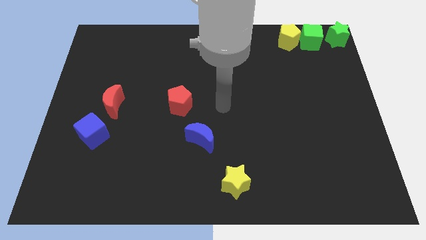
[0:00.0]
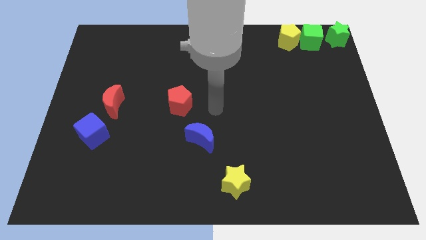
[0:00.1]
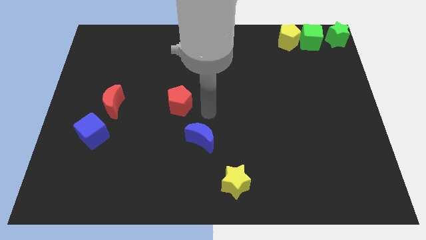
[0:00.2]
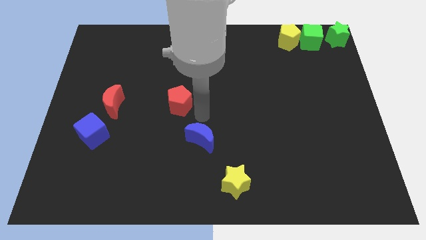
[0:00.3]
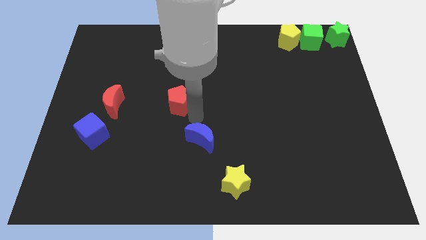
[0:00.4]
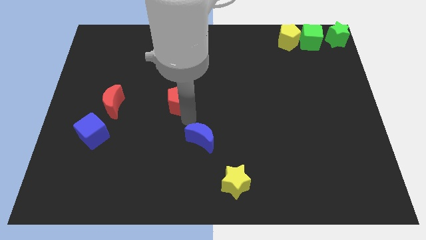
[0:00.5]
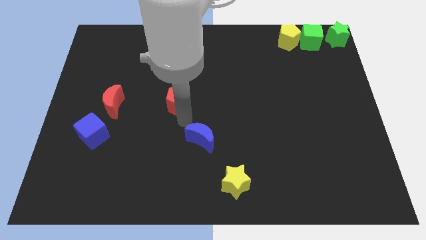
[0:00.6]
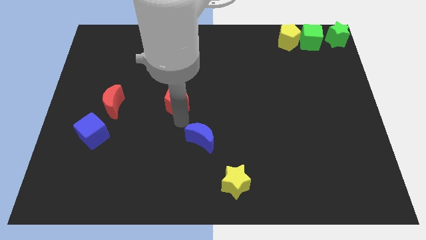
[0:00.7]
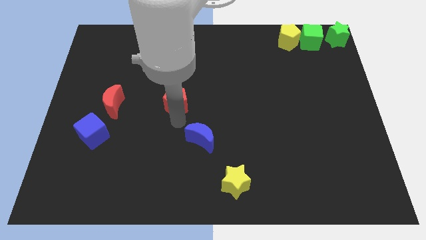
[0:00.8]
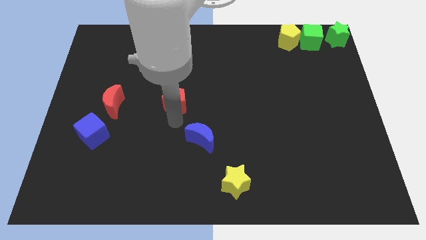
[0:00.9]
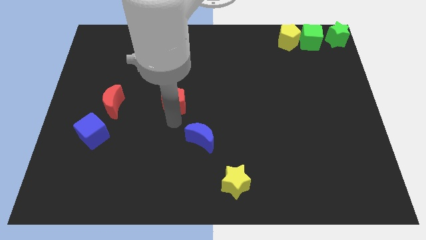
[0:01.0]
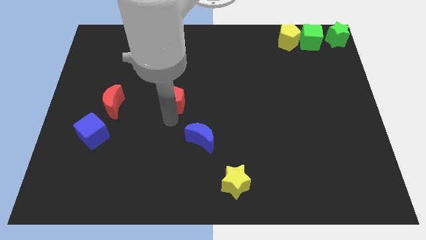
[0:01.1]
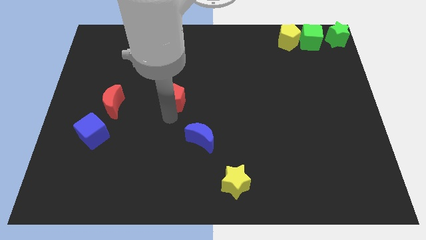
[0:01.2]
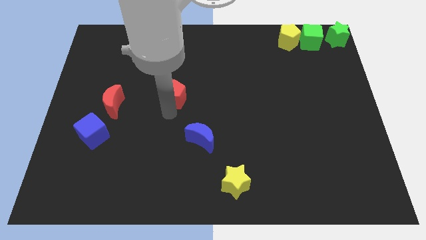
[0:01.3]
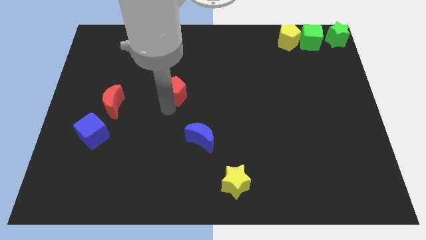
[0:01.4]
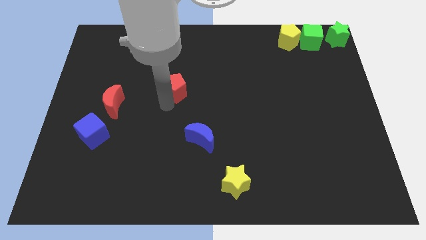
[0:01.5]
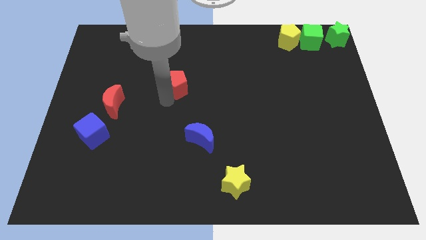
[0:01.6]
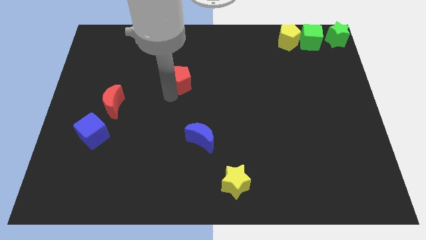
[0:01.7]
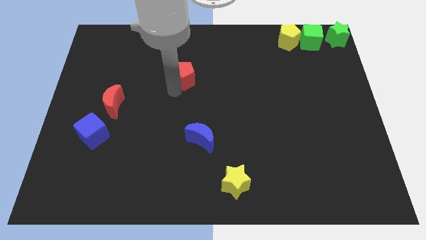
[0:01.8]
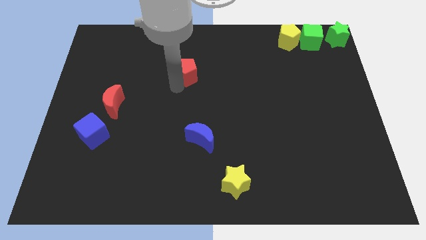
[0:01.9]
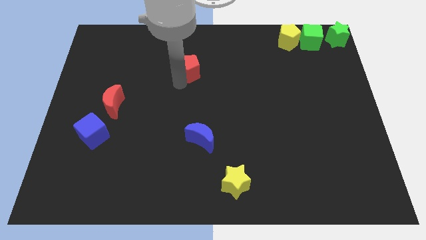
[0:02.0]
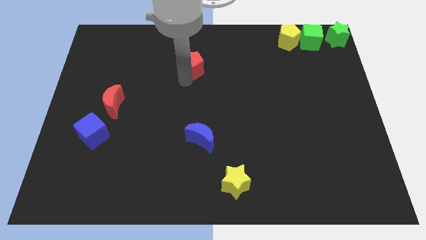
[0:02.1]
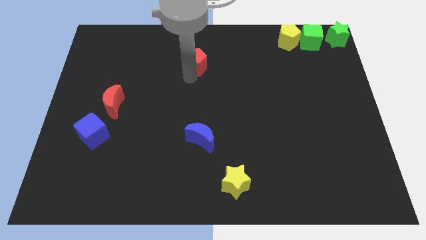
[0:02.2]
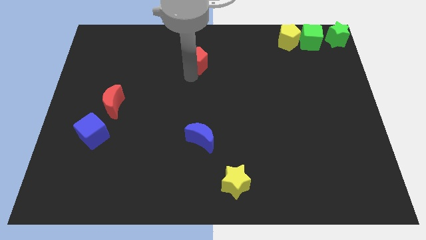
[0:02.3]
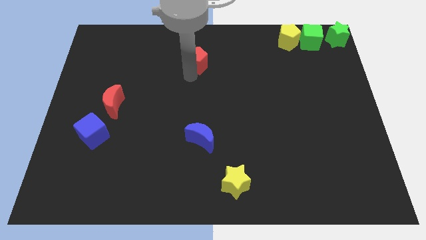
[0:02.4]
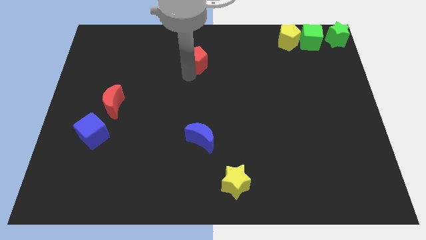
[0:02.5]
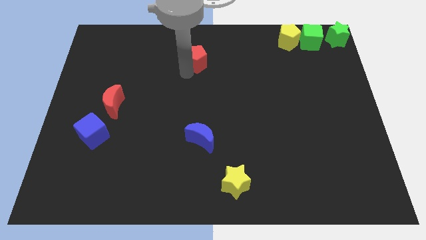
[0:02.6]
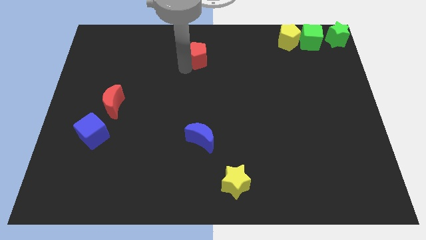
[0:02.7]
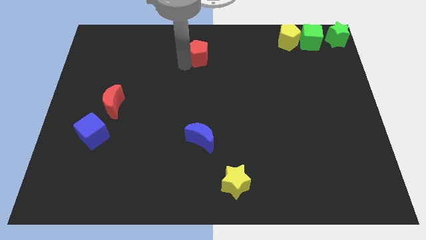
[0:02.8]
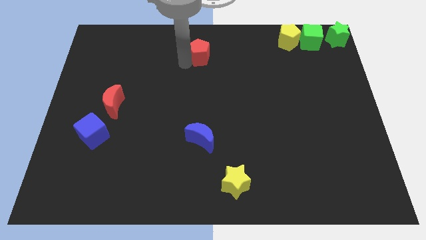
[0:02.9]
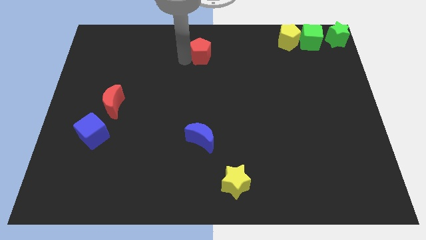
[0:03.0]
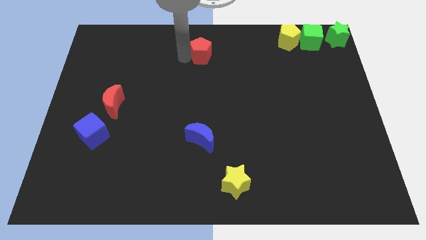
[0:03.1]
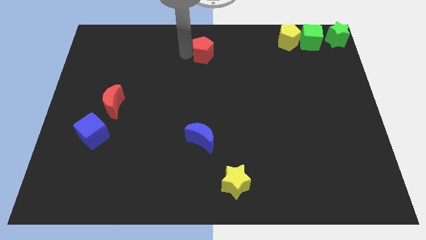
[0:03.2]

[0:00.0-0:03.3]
place the red pentagon vertically above the blue moon

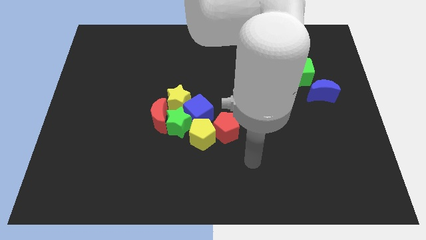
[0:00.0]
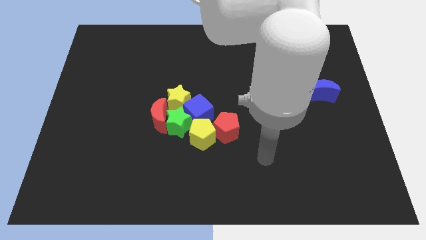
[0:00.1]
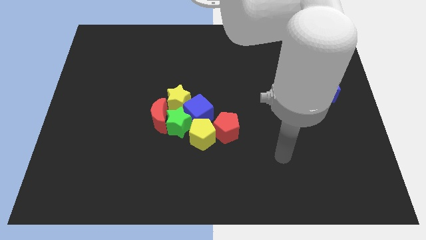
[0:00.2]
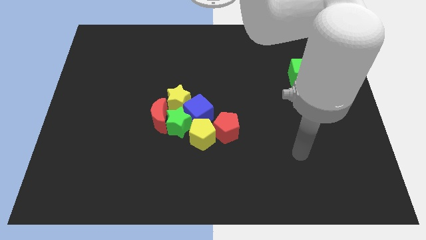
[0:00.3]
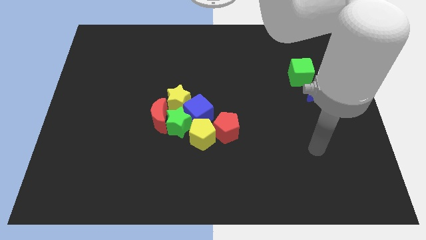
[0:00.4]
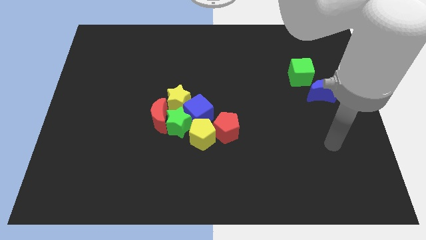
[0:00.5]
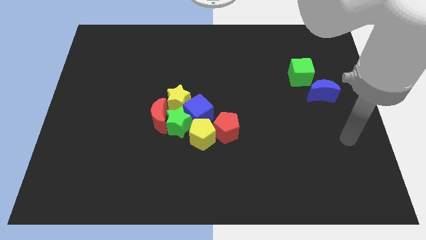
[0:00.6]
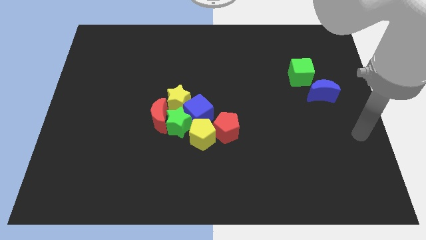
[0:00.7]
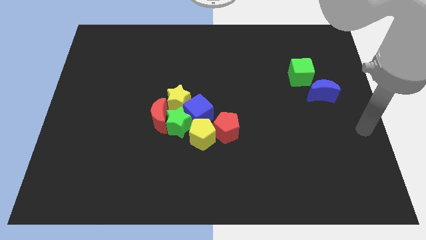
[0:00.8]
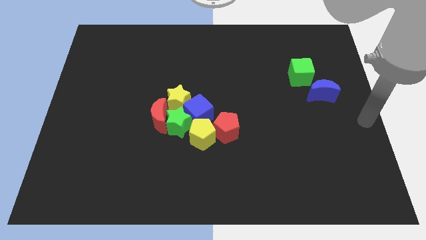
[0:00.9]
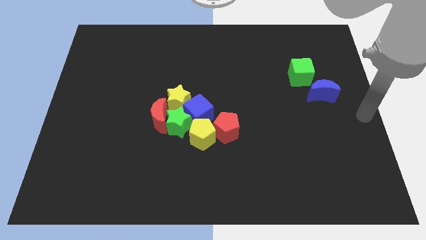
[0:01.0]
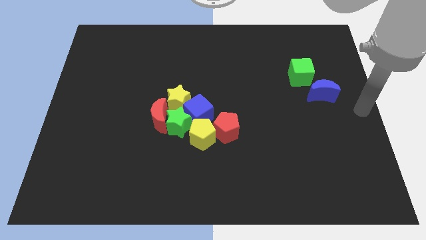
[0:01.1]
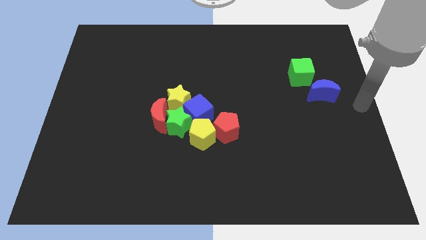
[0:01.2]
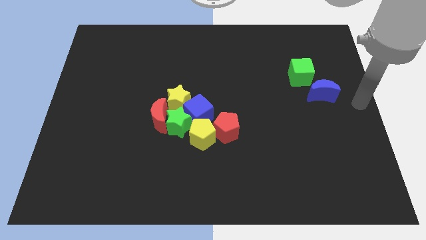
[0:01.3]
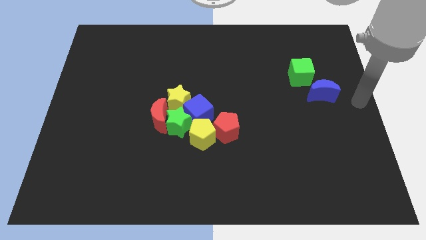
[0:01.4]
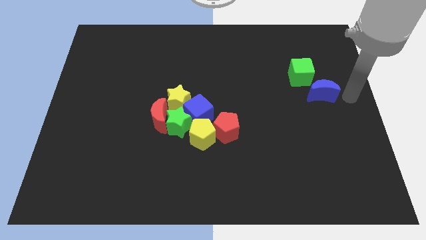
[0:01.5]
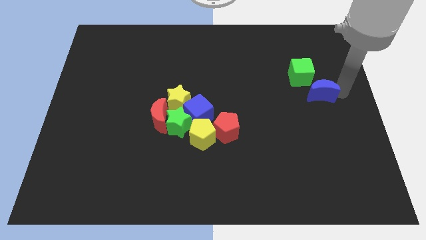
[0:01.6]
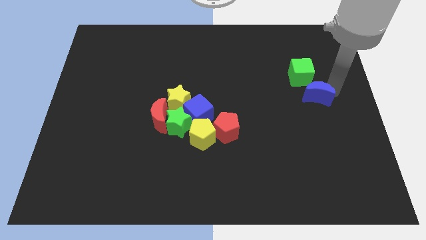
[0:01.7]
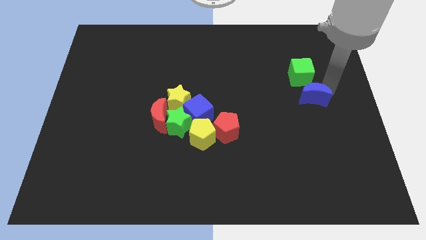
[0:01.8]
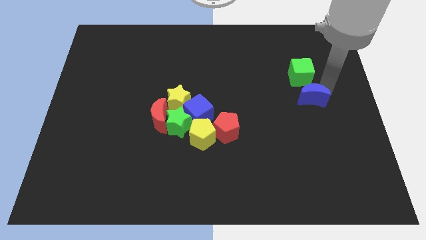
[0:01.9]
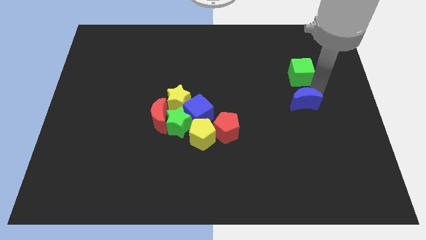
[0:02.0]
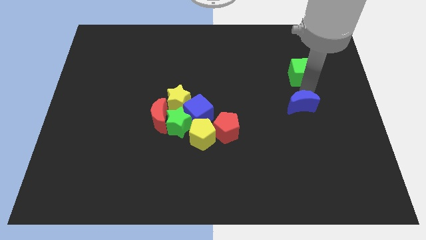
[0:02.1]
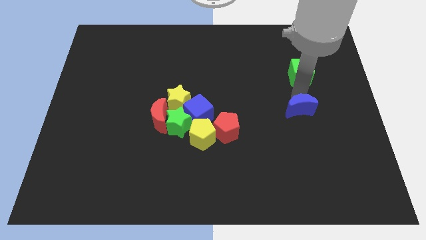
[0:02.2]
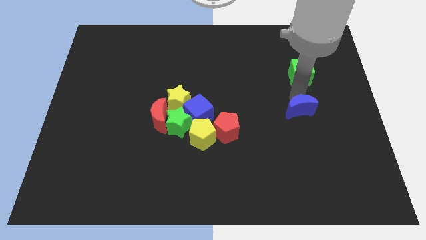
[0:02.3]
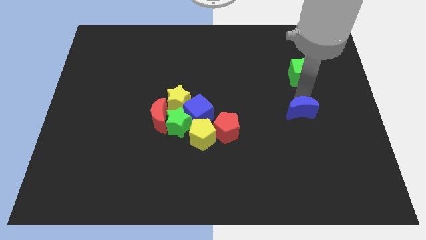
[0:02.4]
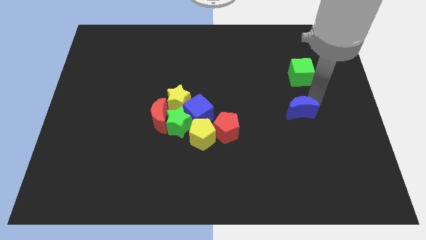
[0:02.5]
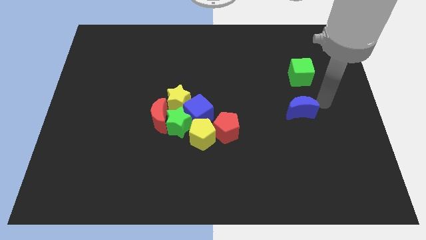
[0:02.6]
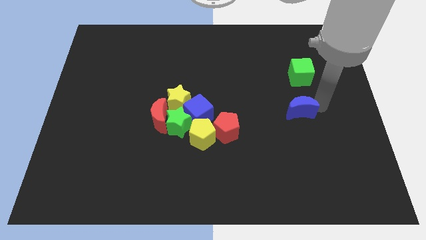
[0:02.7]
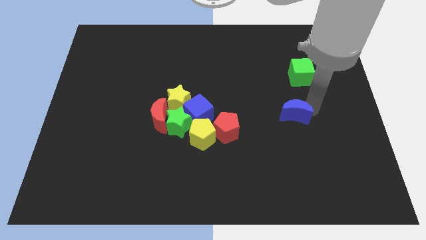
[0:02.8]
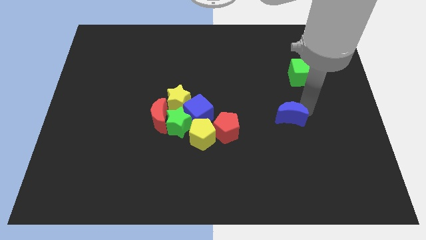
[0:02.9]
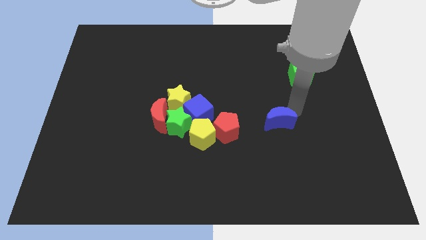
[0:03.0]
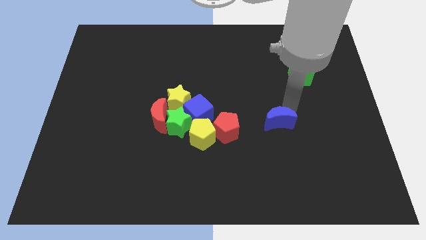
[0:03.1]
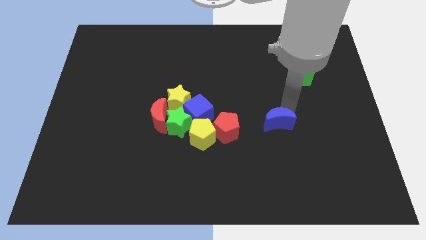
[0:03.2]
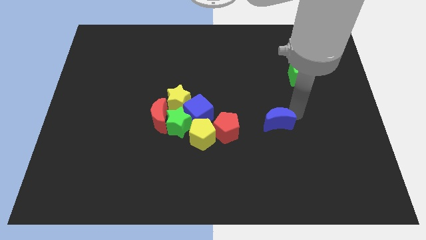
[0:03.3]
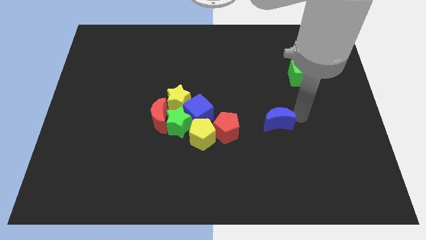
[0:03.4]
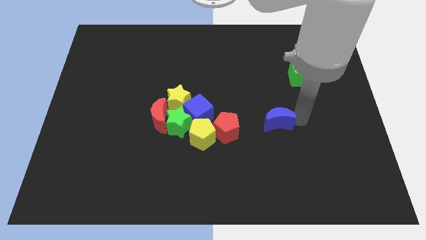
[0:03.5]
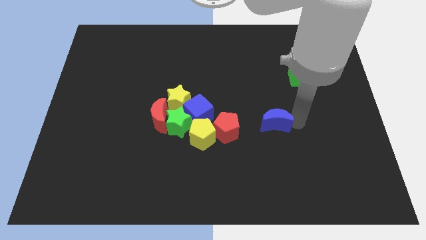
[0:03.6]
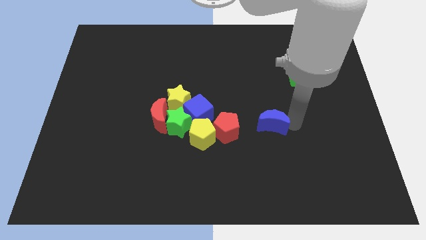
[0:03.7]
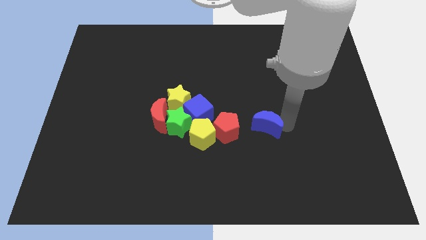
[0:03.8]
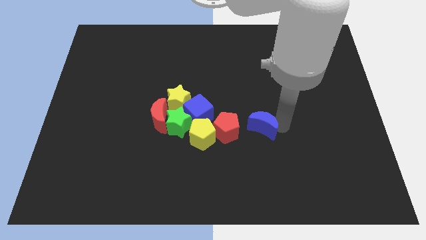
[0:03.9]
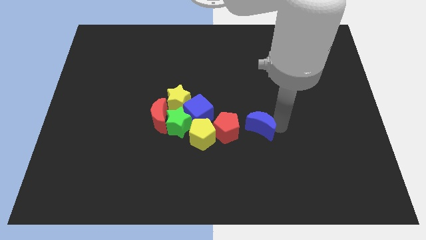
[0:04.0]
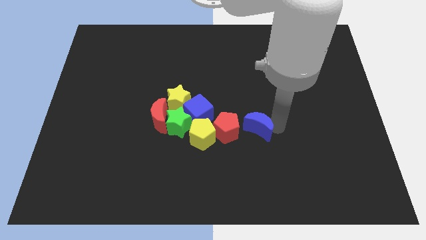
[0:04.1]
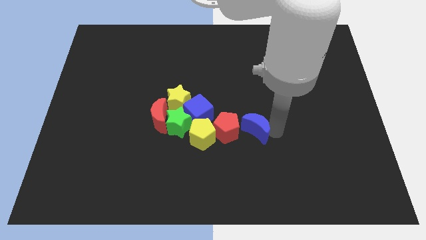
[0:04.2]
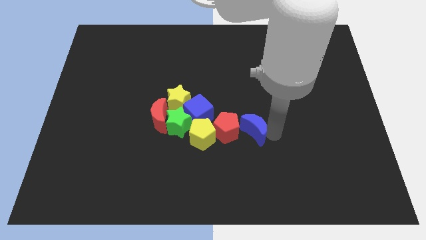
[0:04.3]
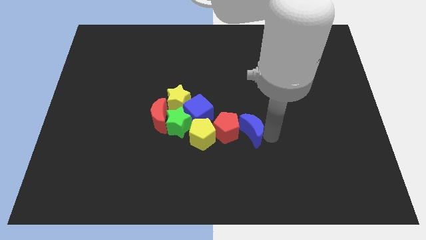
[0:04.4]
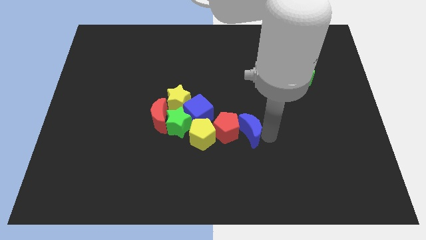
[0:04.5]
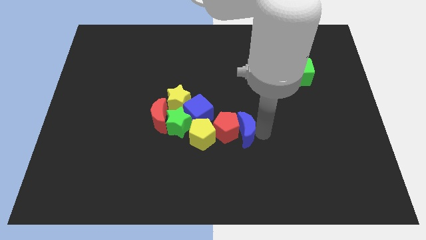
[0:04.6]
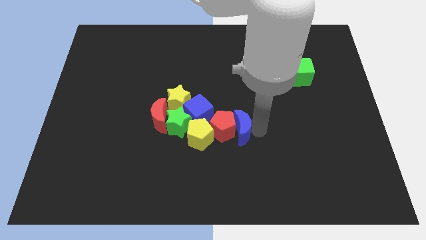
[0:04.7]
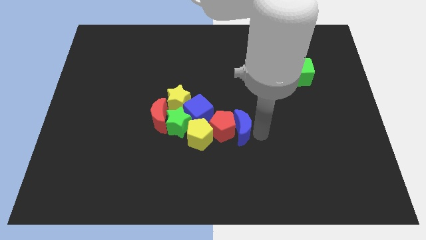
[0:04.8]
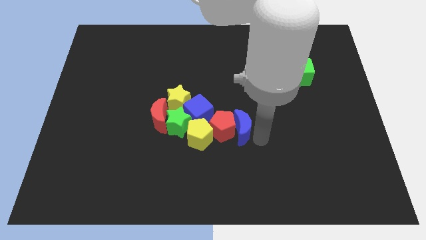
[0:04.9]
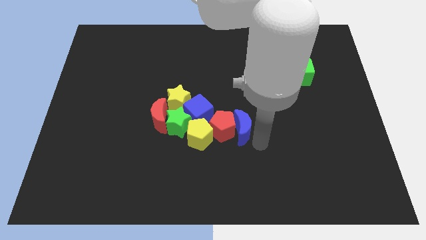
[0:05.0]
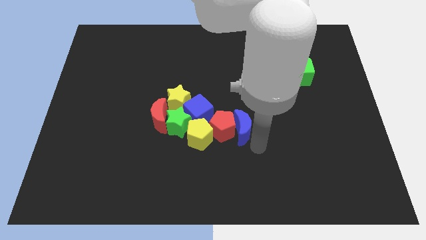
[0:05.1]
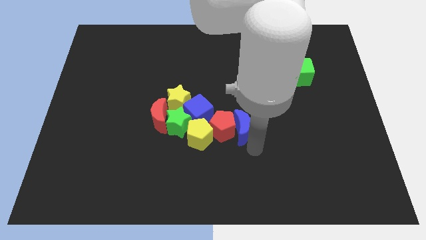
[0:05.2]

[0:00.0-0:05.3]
separate the blue crescent from the green cube

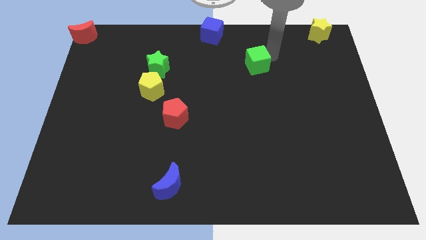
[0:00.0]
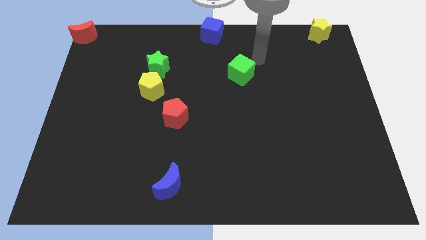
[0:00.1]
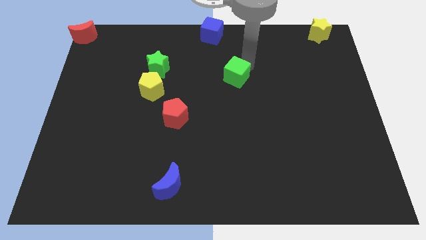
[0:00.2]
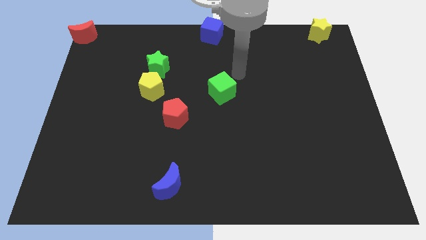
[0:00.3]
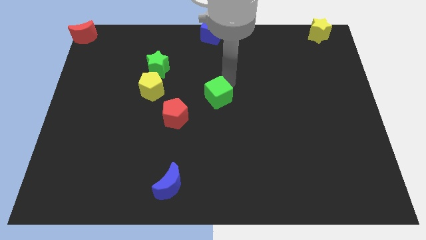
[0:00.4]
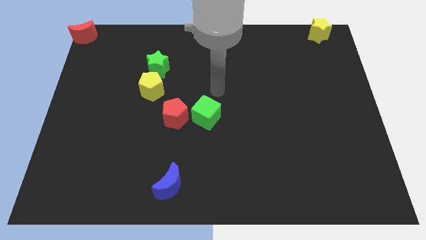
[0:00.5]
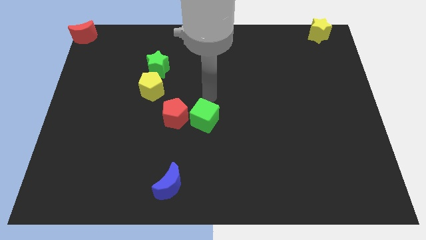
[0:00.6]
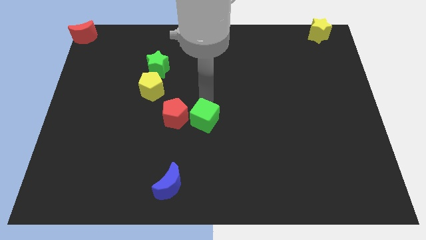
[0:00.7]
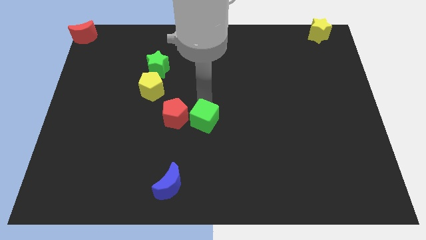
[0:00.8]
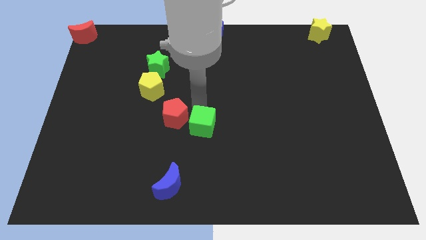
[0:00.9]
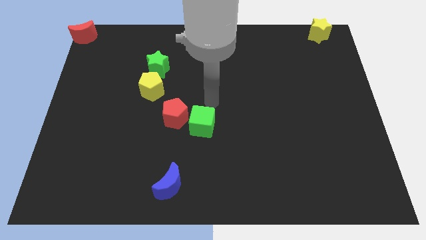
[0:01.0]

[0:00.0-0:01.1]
move green cube to the right of red pentagon
